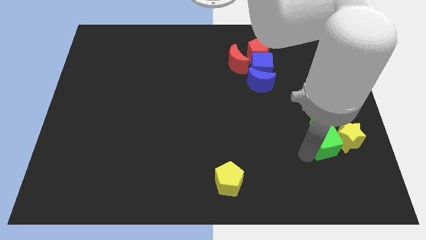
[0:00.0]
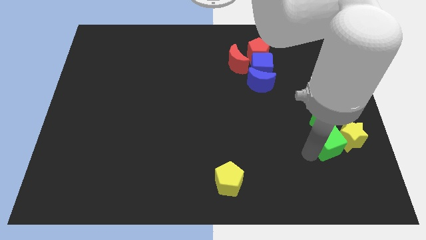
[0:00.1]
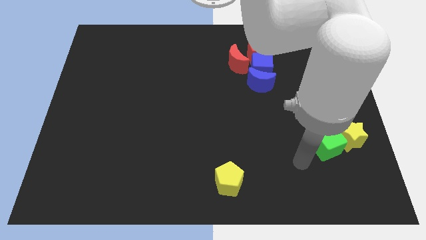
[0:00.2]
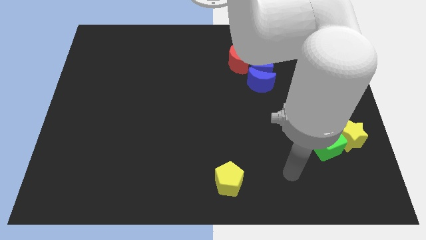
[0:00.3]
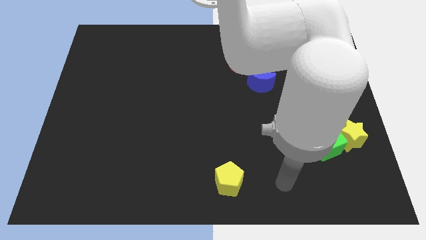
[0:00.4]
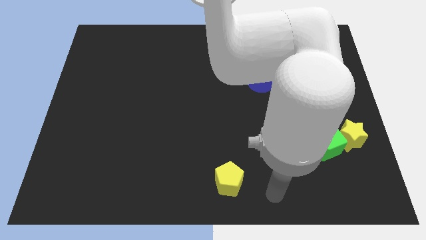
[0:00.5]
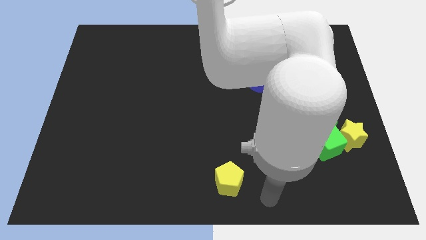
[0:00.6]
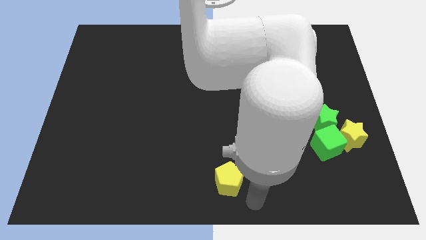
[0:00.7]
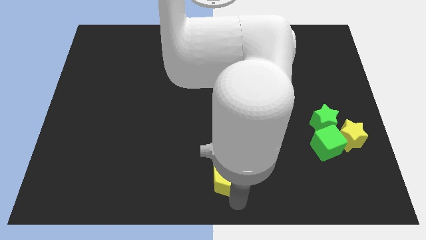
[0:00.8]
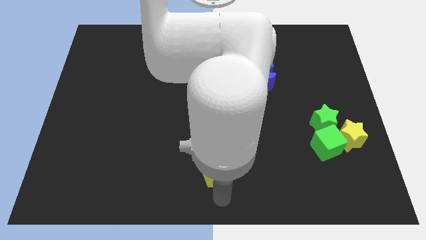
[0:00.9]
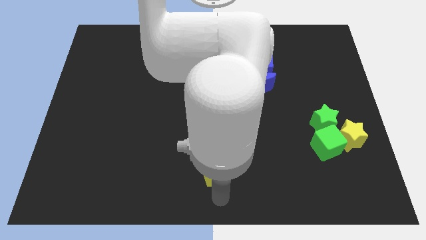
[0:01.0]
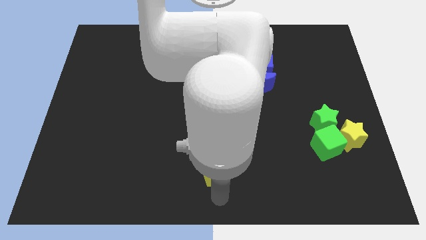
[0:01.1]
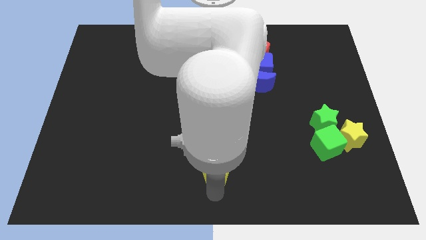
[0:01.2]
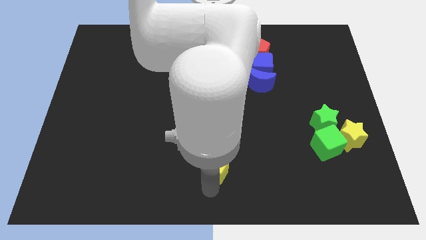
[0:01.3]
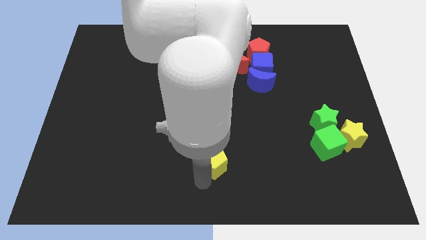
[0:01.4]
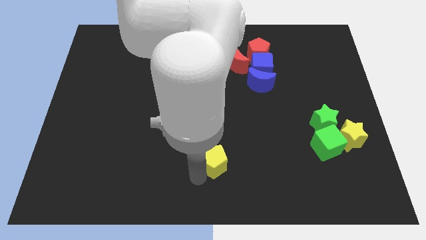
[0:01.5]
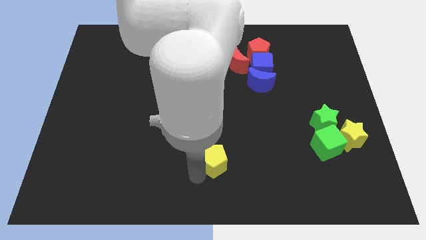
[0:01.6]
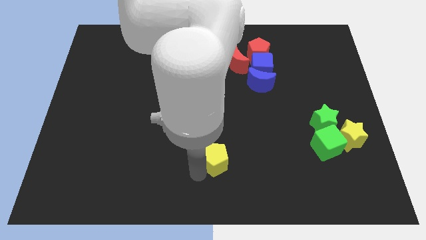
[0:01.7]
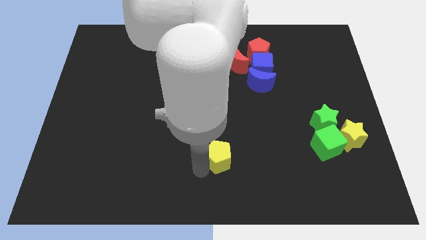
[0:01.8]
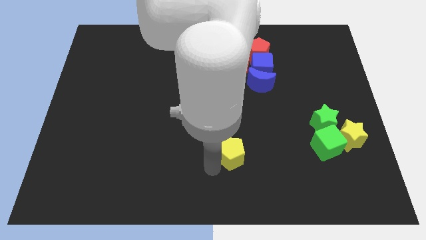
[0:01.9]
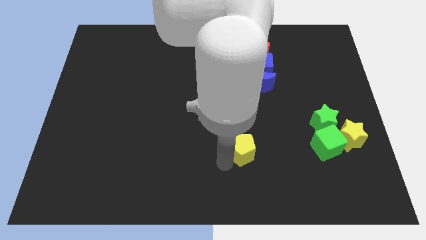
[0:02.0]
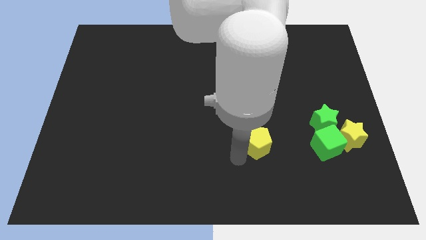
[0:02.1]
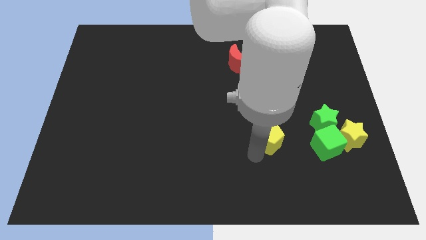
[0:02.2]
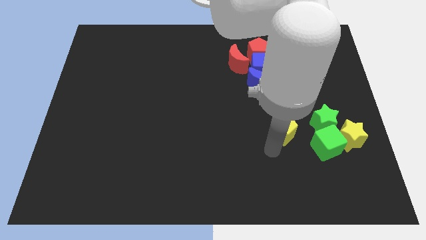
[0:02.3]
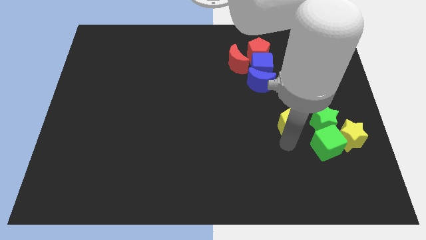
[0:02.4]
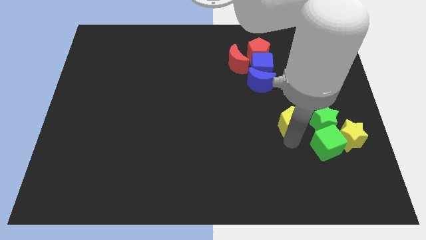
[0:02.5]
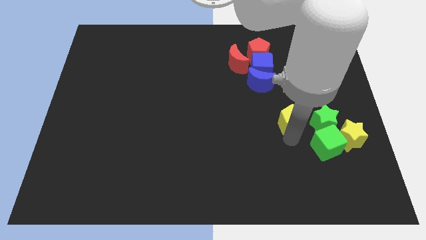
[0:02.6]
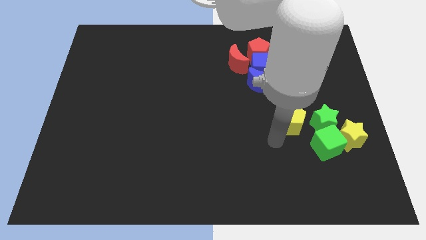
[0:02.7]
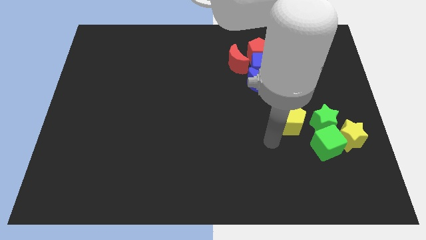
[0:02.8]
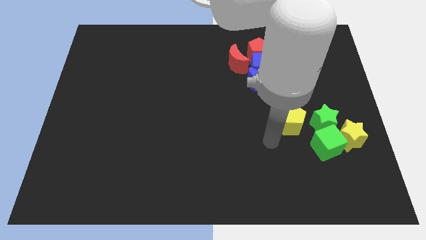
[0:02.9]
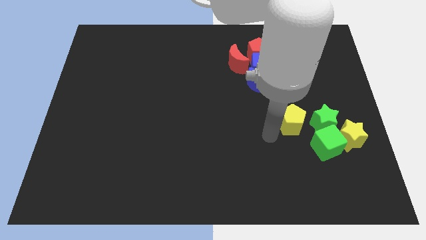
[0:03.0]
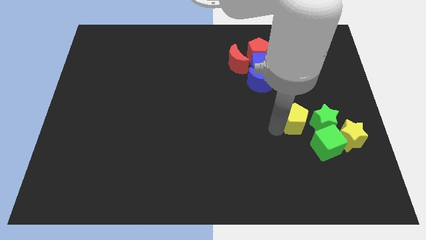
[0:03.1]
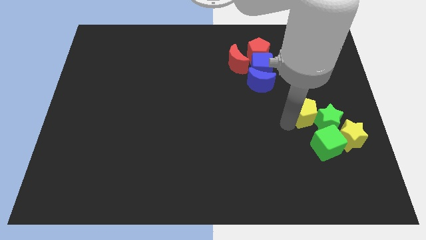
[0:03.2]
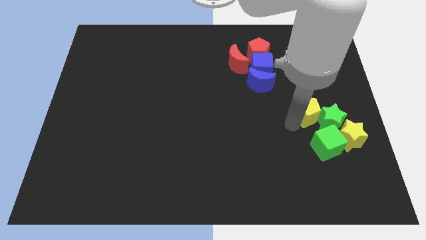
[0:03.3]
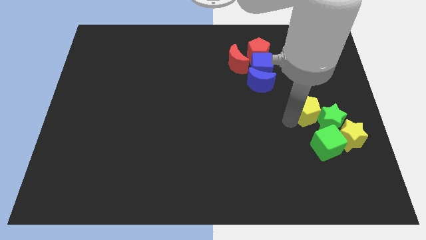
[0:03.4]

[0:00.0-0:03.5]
move yellow pentagon into green star

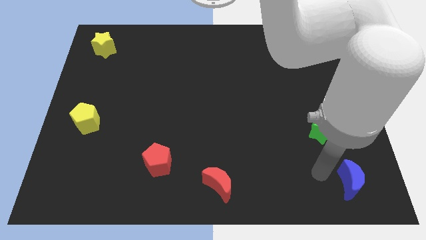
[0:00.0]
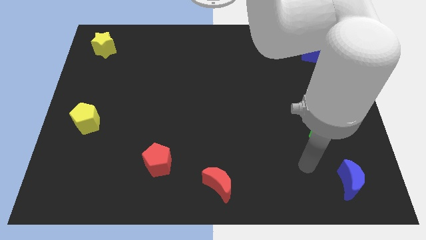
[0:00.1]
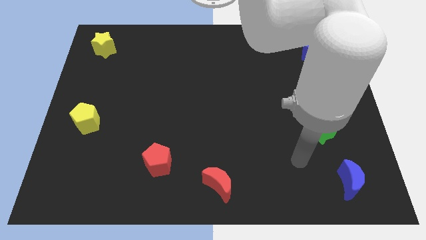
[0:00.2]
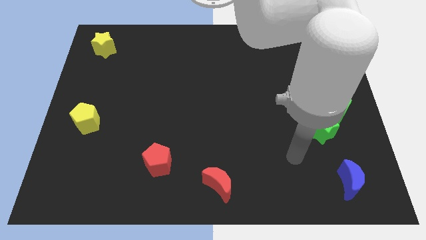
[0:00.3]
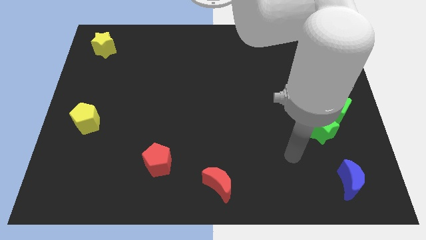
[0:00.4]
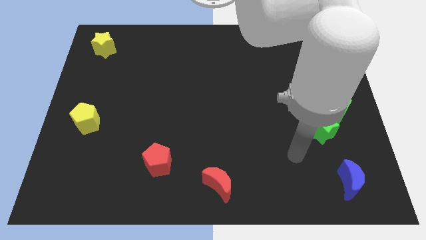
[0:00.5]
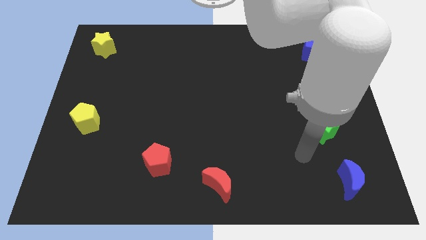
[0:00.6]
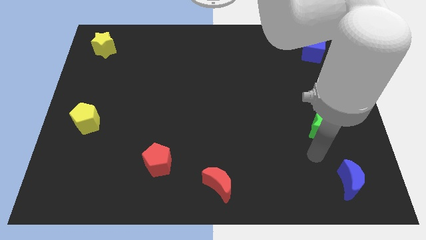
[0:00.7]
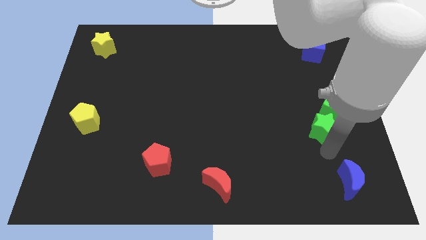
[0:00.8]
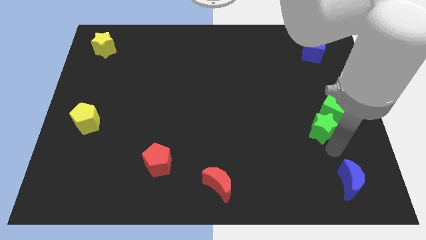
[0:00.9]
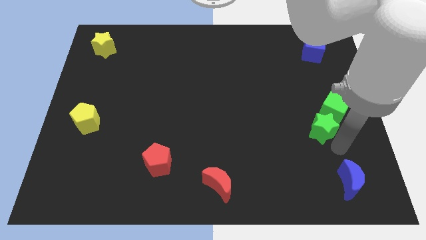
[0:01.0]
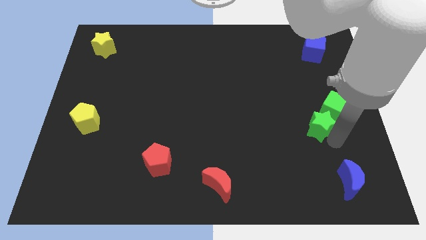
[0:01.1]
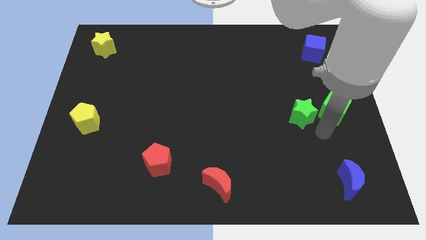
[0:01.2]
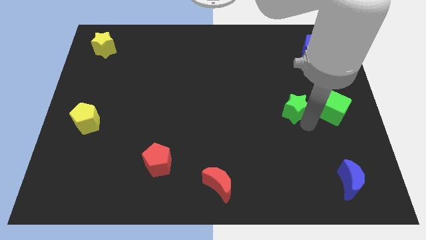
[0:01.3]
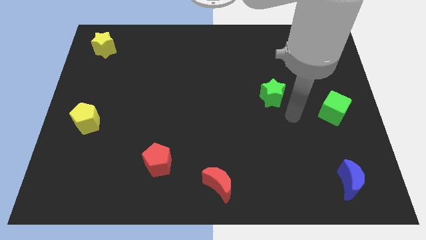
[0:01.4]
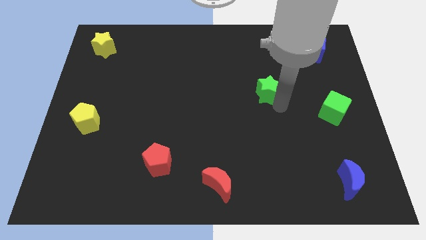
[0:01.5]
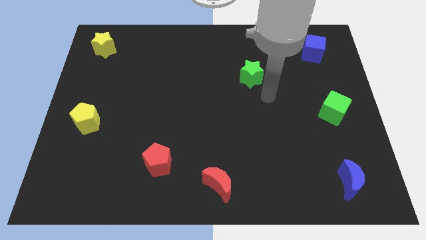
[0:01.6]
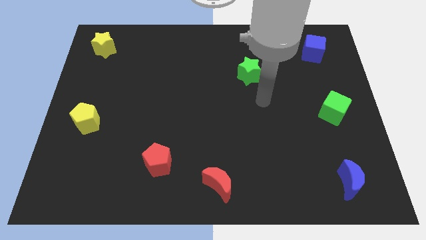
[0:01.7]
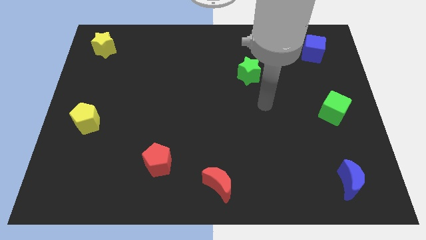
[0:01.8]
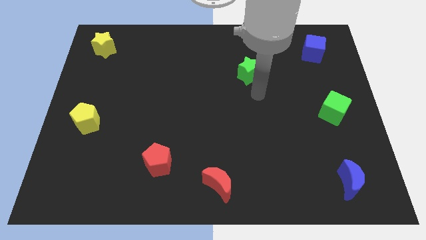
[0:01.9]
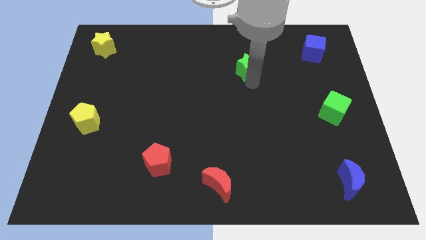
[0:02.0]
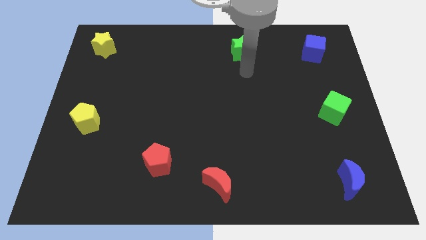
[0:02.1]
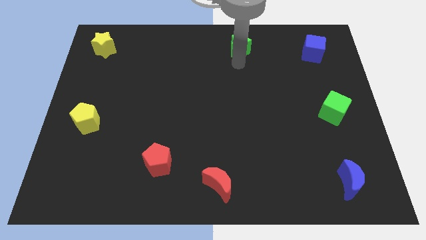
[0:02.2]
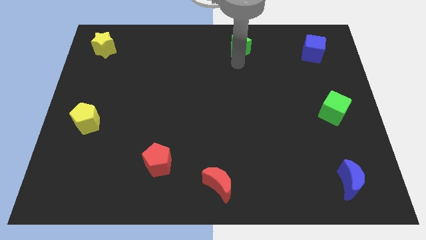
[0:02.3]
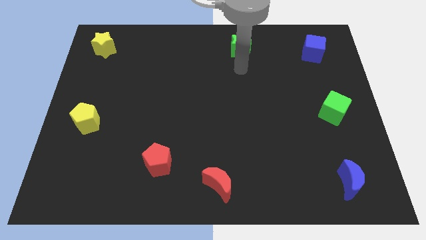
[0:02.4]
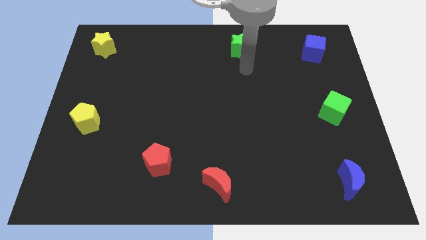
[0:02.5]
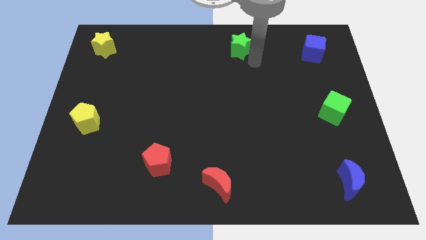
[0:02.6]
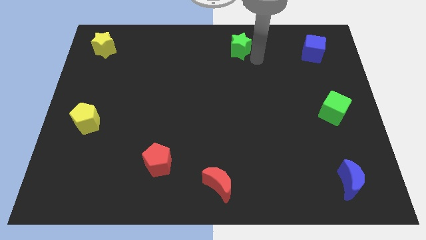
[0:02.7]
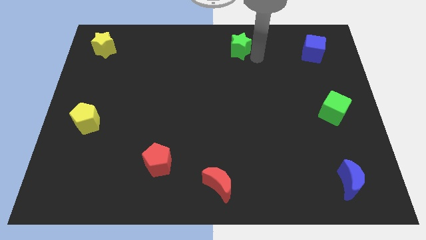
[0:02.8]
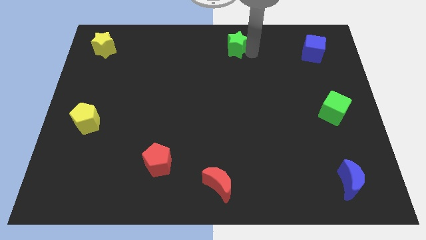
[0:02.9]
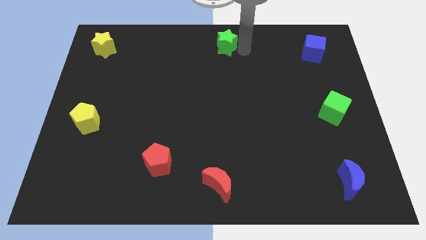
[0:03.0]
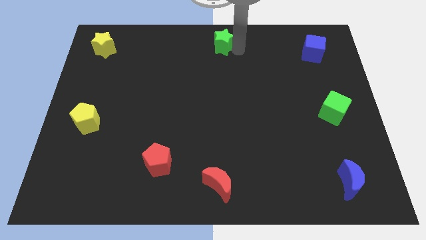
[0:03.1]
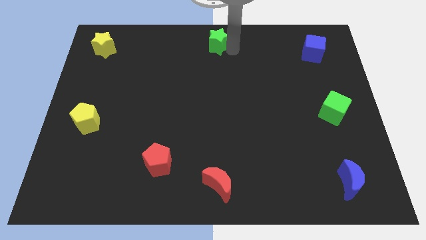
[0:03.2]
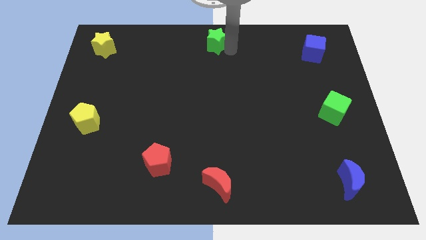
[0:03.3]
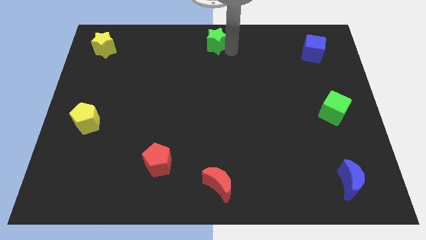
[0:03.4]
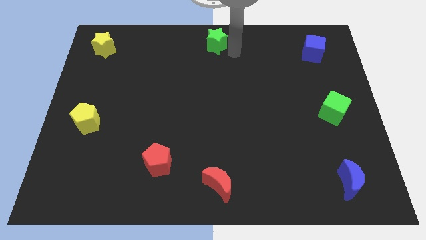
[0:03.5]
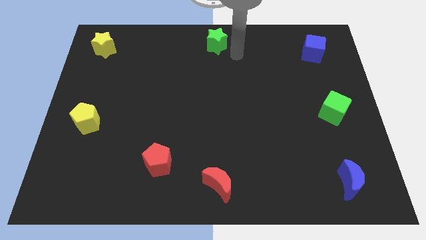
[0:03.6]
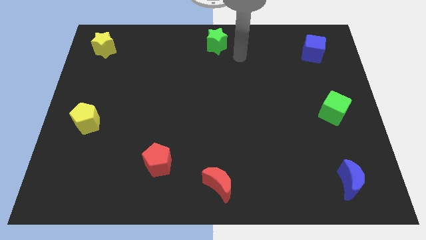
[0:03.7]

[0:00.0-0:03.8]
place the green star towards the top center of the board

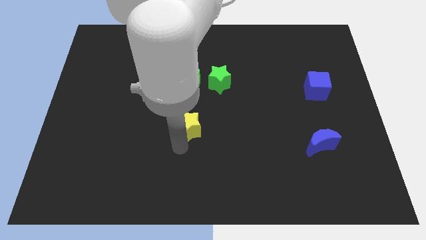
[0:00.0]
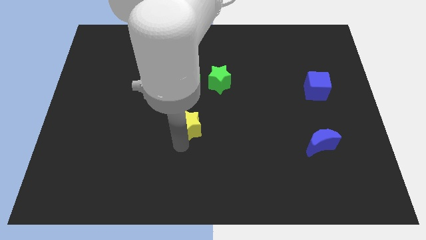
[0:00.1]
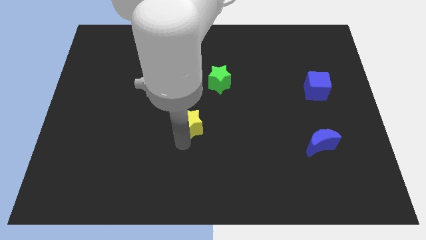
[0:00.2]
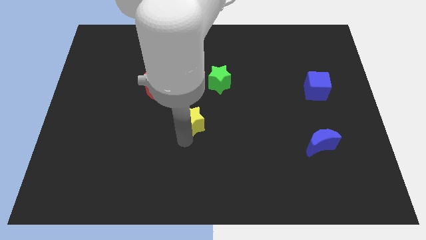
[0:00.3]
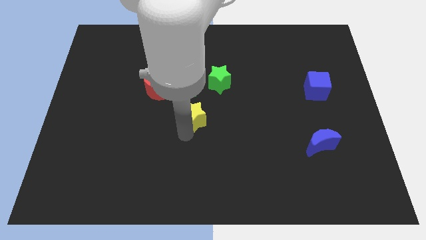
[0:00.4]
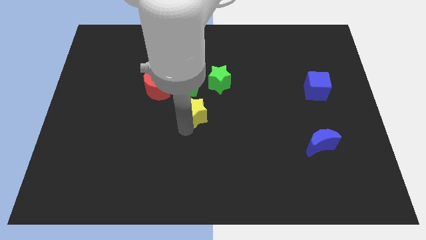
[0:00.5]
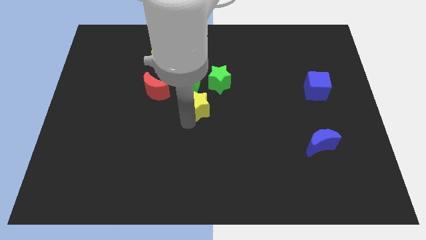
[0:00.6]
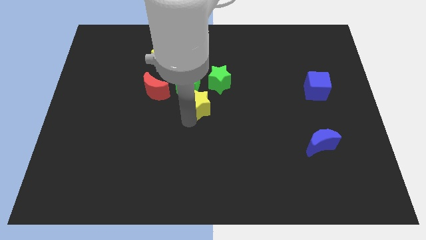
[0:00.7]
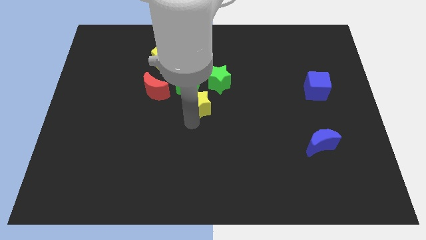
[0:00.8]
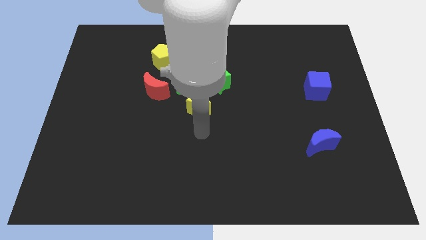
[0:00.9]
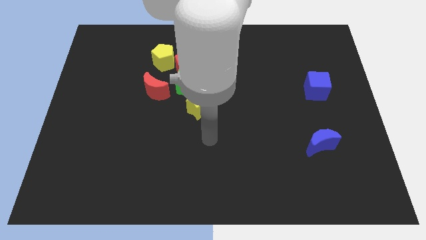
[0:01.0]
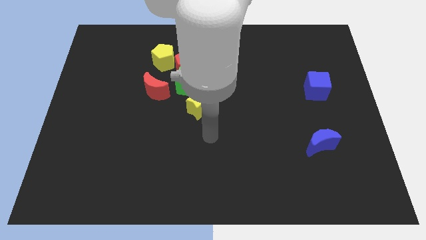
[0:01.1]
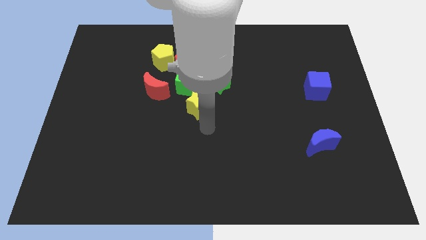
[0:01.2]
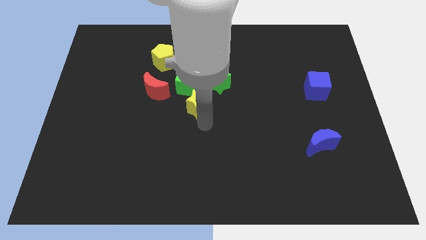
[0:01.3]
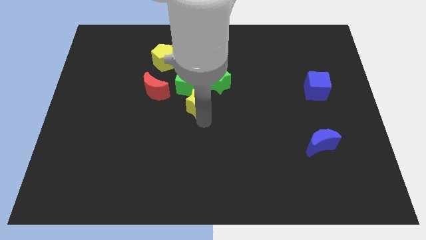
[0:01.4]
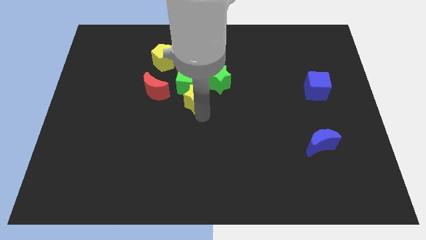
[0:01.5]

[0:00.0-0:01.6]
push yellow star upwards
